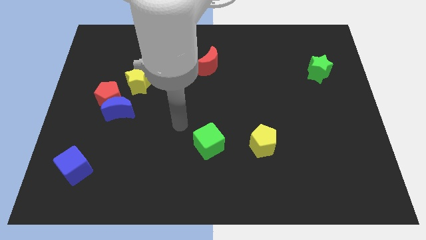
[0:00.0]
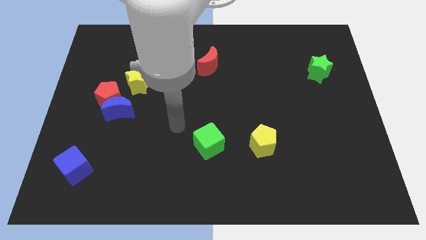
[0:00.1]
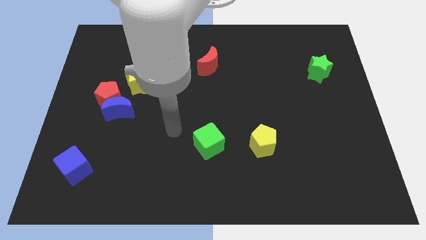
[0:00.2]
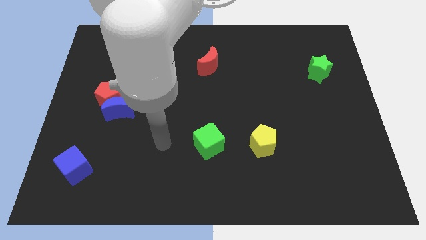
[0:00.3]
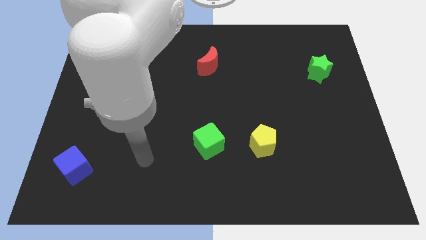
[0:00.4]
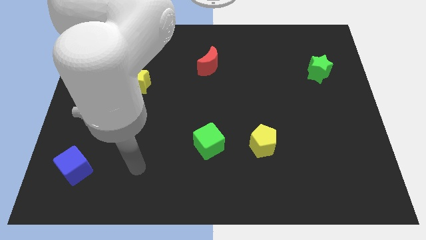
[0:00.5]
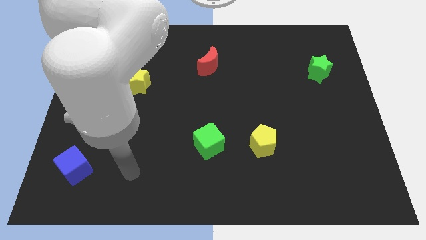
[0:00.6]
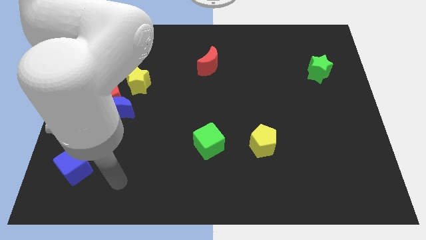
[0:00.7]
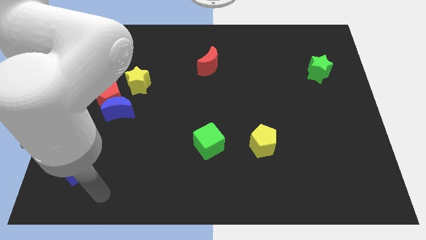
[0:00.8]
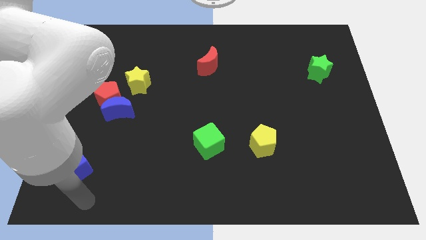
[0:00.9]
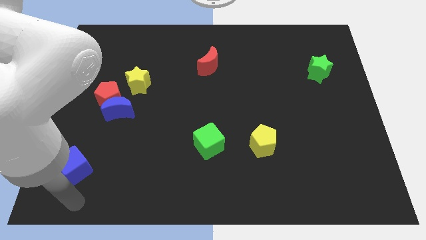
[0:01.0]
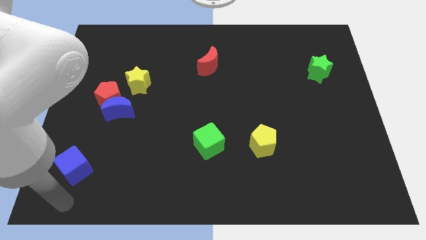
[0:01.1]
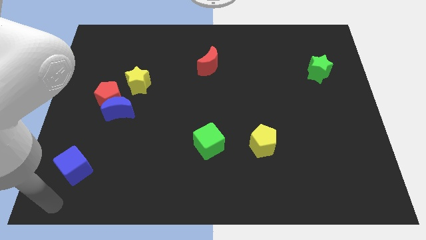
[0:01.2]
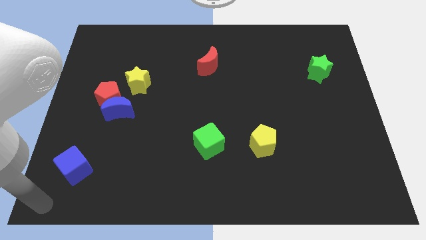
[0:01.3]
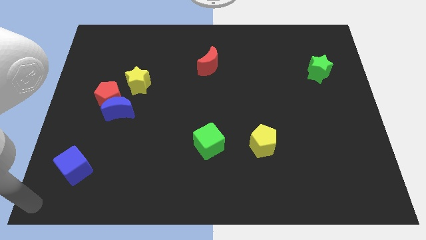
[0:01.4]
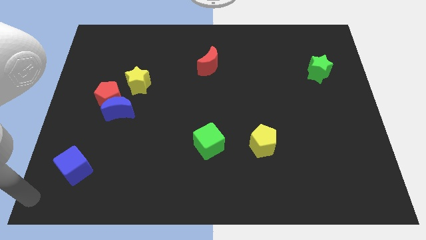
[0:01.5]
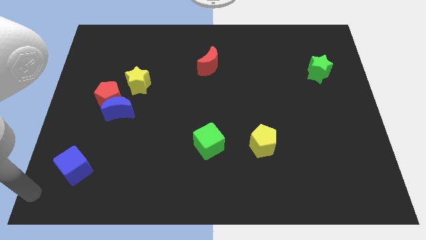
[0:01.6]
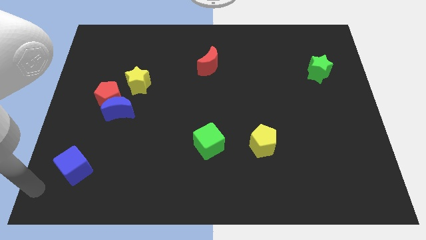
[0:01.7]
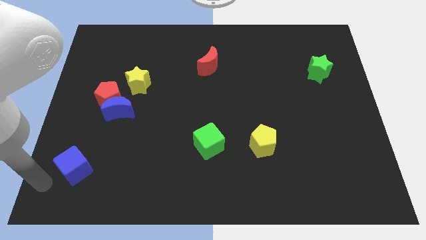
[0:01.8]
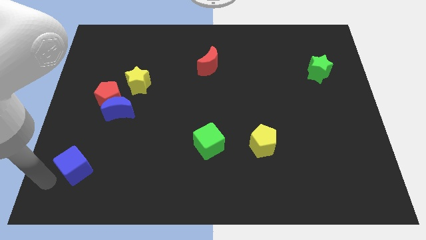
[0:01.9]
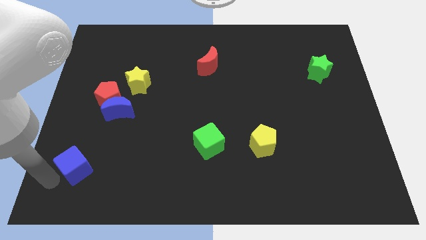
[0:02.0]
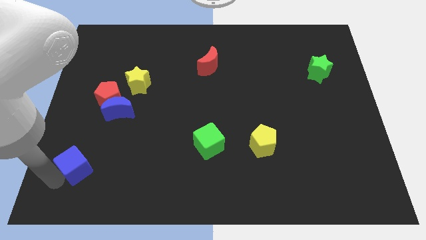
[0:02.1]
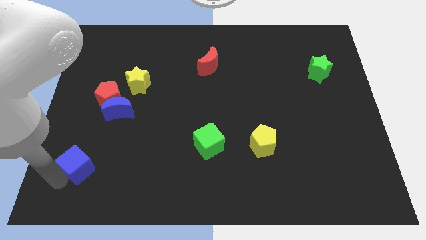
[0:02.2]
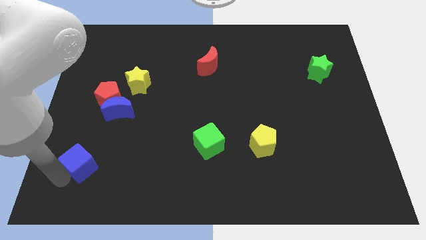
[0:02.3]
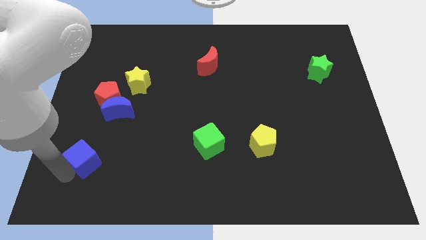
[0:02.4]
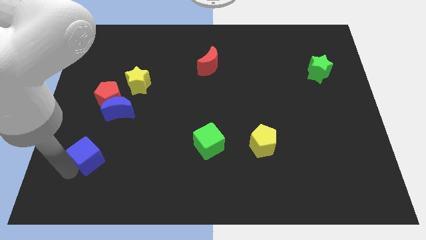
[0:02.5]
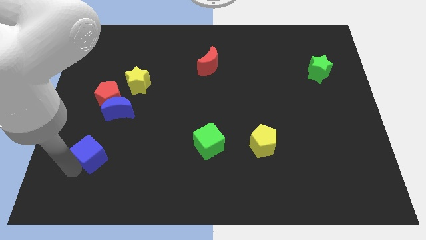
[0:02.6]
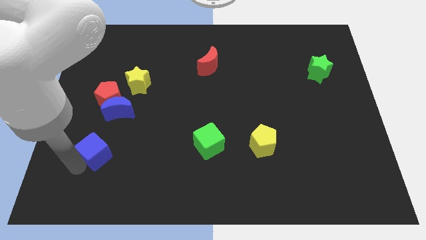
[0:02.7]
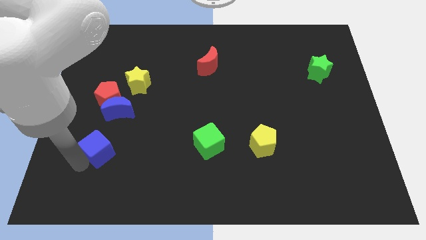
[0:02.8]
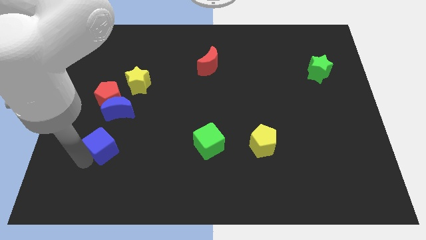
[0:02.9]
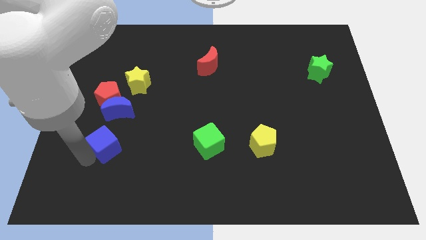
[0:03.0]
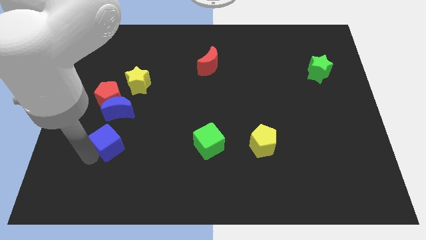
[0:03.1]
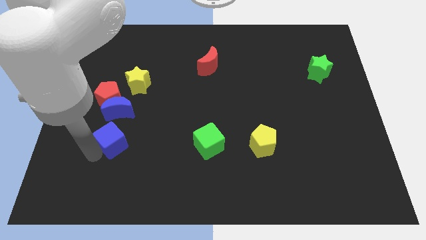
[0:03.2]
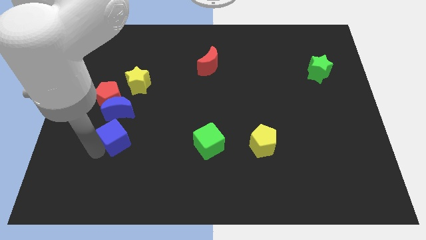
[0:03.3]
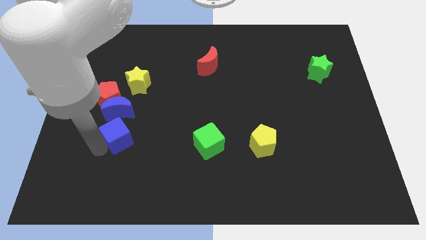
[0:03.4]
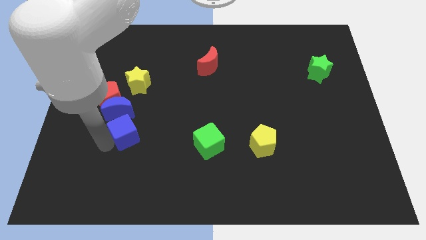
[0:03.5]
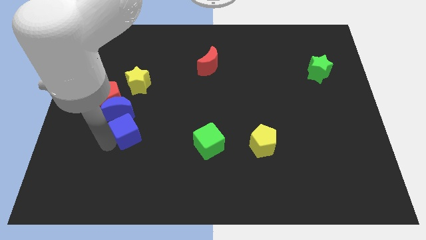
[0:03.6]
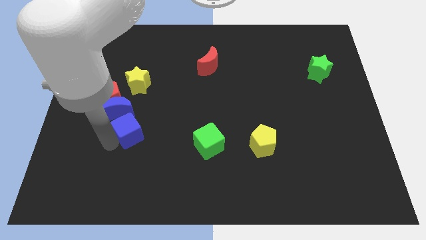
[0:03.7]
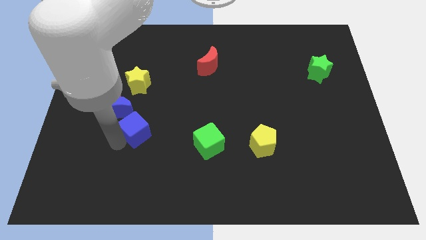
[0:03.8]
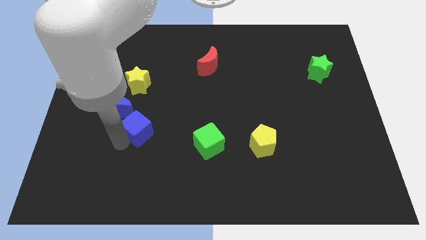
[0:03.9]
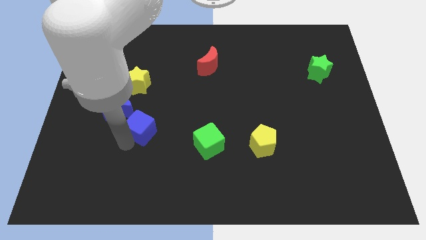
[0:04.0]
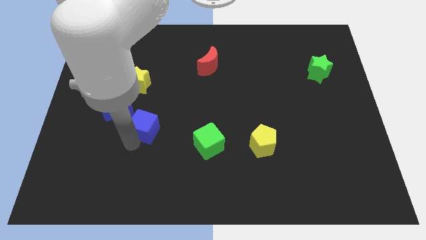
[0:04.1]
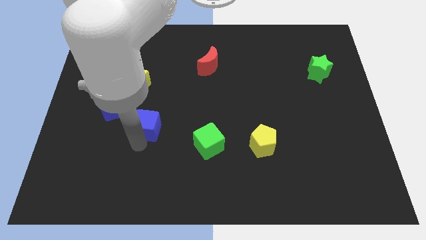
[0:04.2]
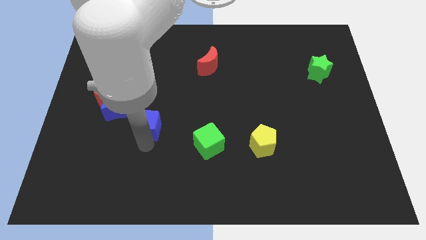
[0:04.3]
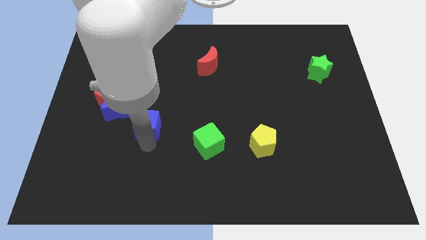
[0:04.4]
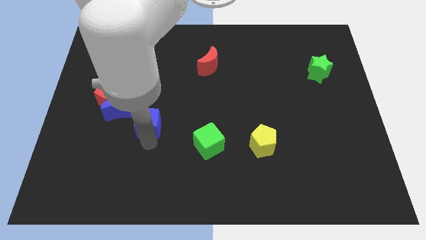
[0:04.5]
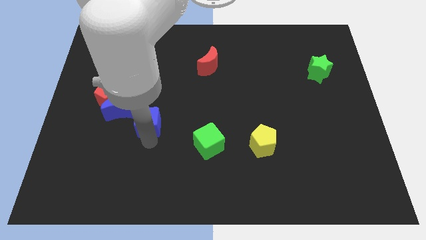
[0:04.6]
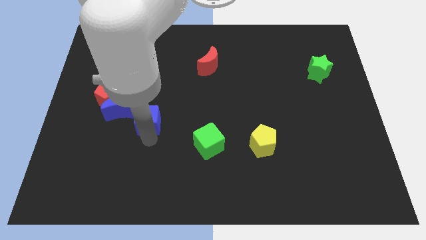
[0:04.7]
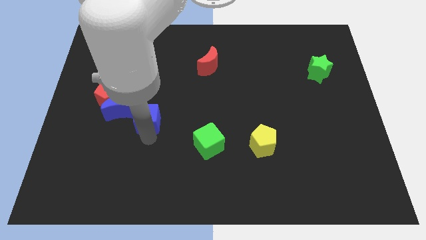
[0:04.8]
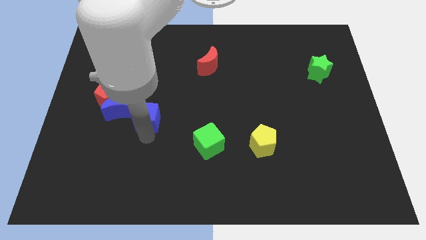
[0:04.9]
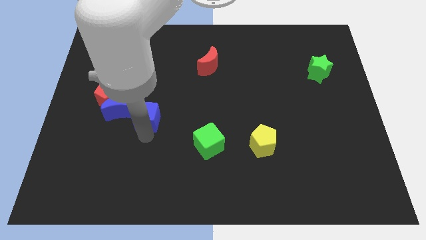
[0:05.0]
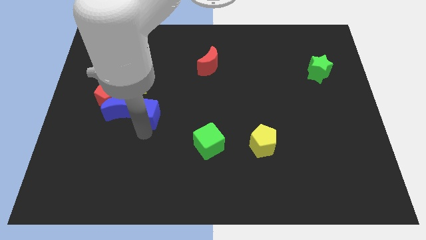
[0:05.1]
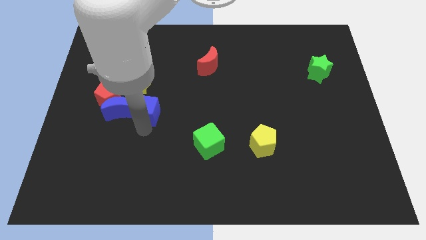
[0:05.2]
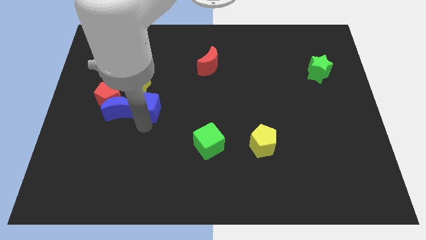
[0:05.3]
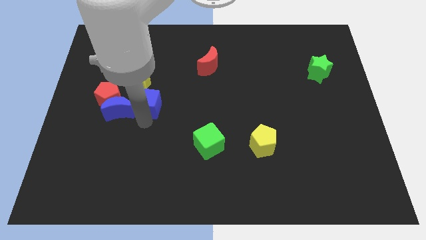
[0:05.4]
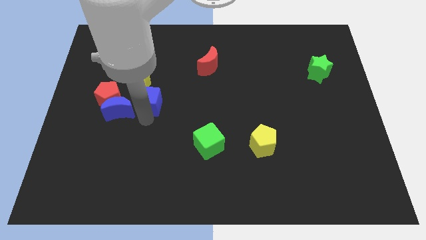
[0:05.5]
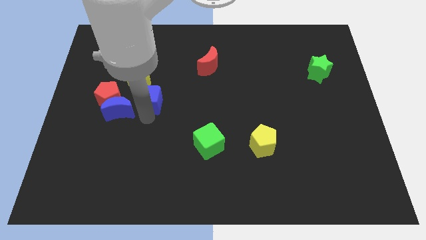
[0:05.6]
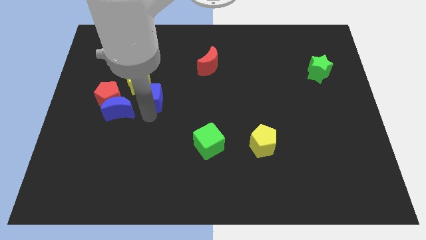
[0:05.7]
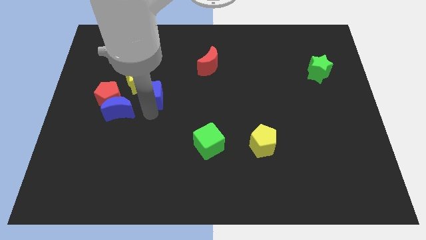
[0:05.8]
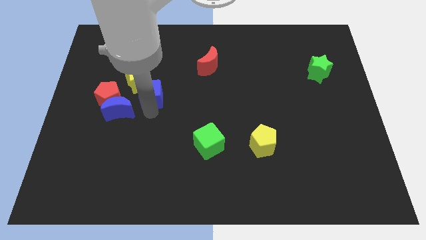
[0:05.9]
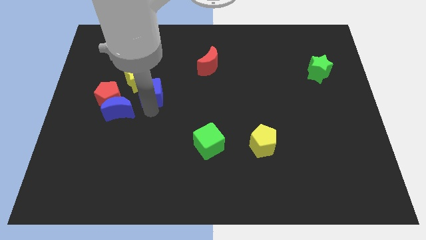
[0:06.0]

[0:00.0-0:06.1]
push the blue cube towards the yellow star

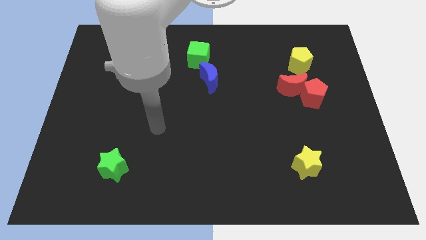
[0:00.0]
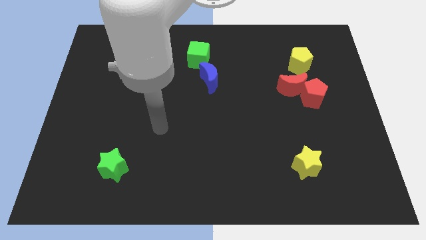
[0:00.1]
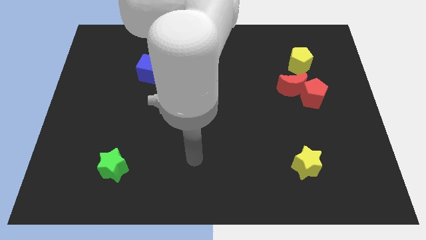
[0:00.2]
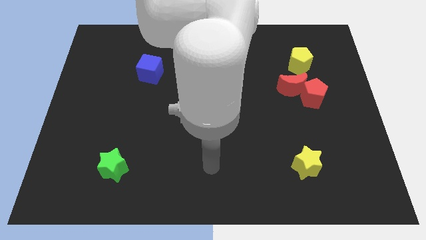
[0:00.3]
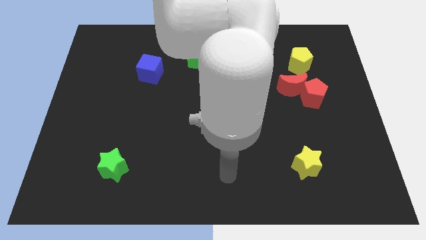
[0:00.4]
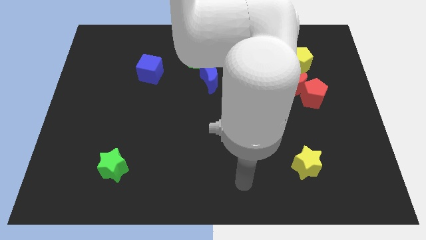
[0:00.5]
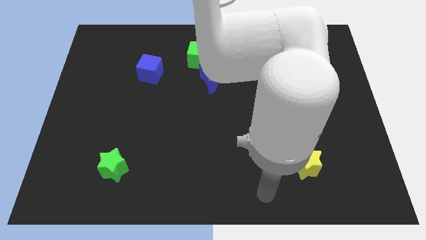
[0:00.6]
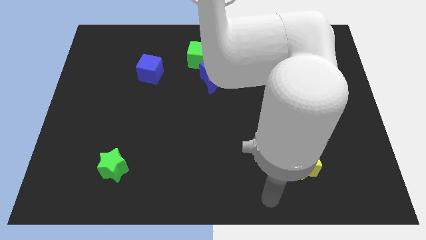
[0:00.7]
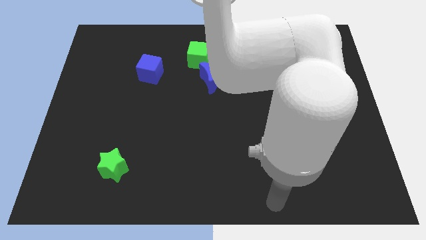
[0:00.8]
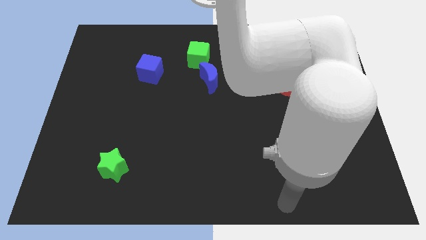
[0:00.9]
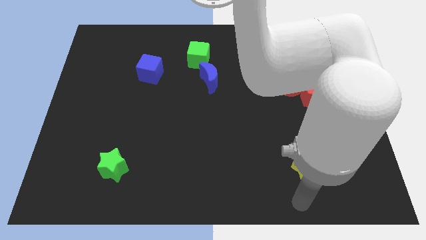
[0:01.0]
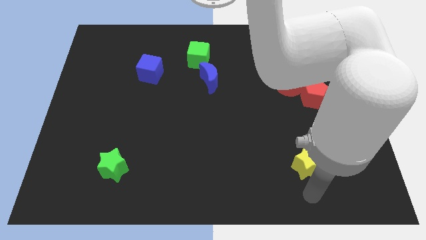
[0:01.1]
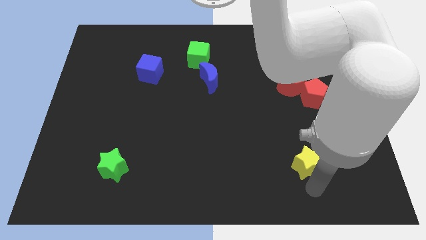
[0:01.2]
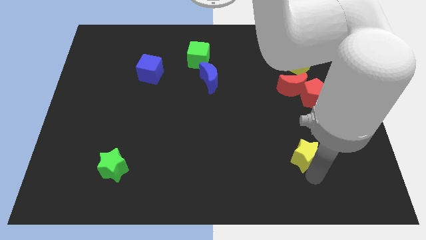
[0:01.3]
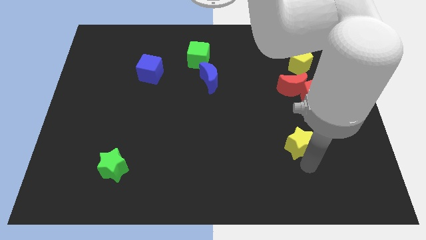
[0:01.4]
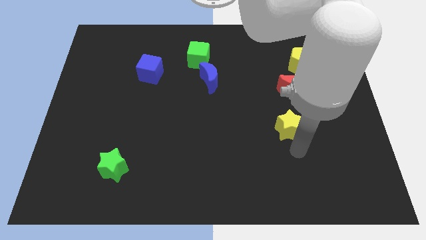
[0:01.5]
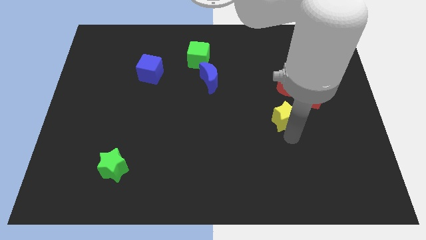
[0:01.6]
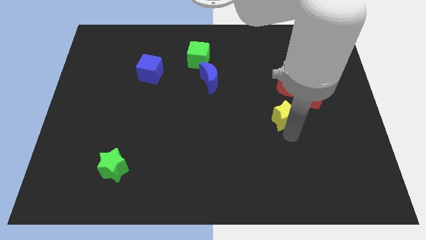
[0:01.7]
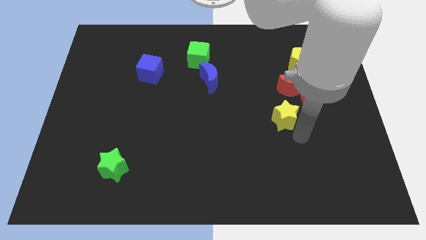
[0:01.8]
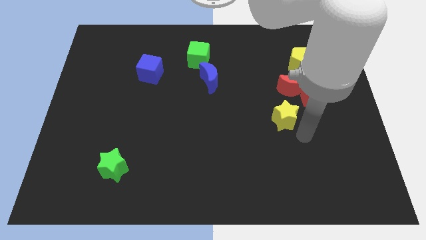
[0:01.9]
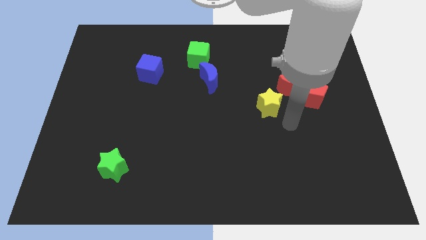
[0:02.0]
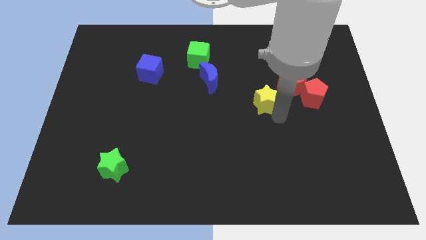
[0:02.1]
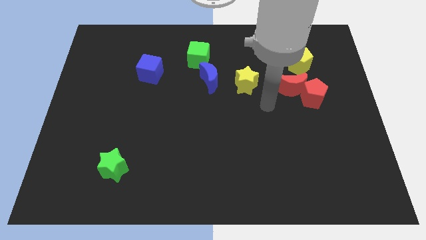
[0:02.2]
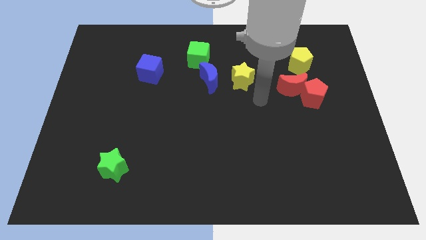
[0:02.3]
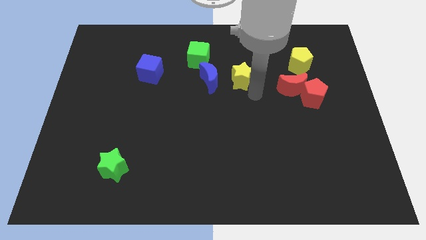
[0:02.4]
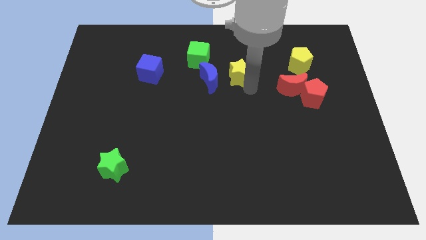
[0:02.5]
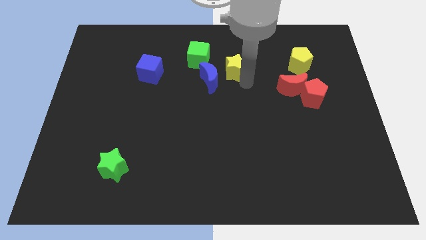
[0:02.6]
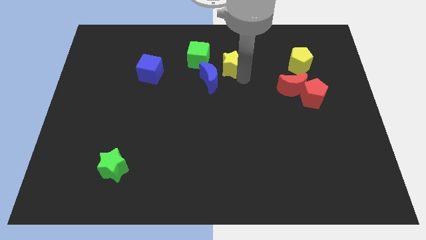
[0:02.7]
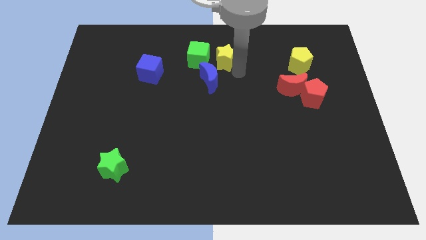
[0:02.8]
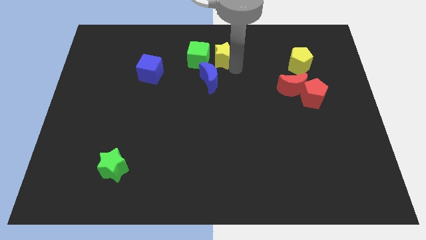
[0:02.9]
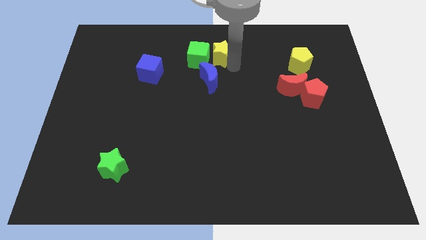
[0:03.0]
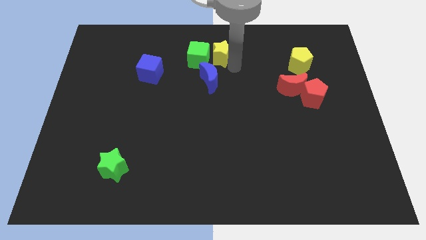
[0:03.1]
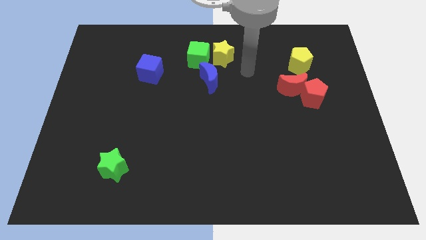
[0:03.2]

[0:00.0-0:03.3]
move the yellow star towards the green cube
